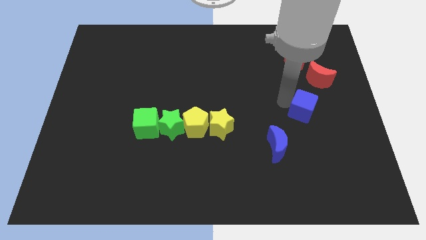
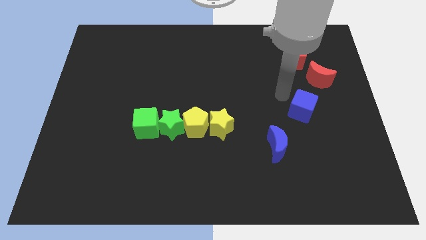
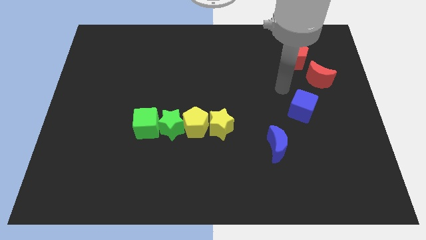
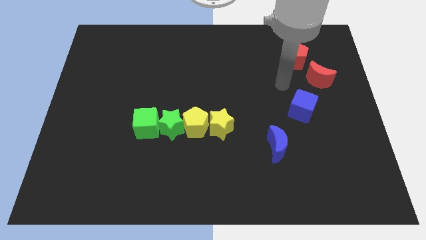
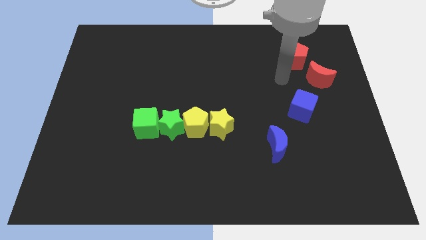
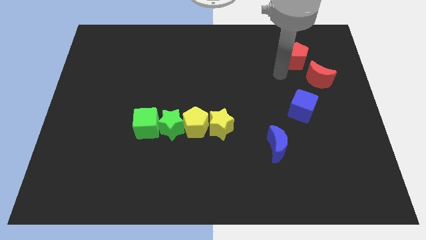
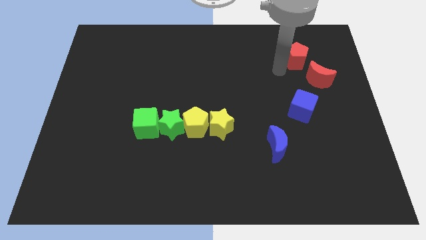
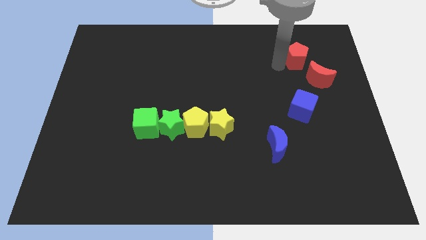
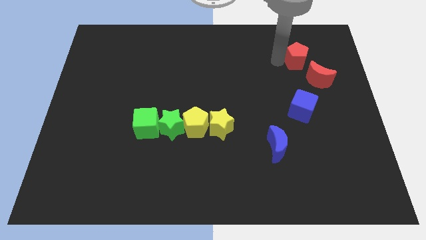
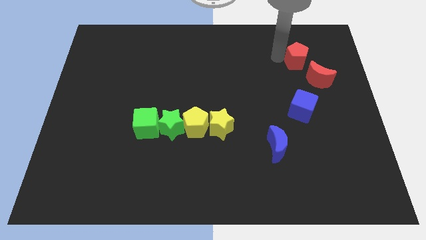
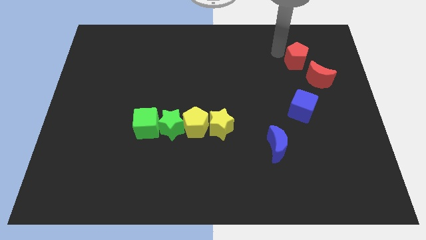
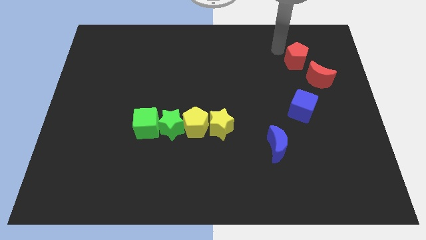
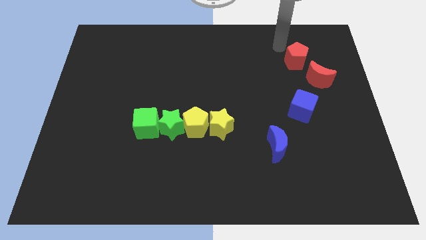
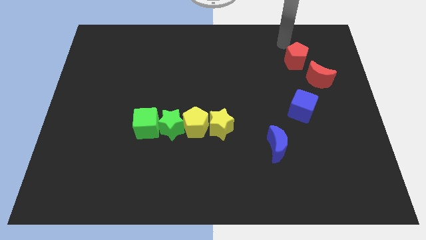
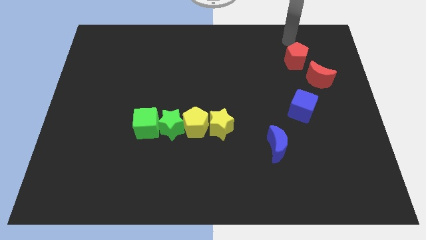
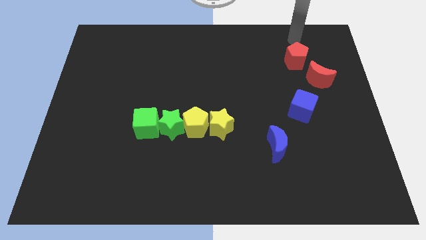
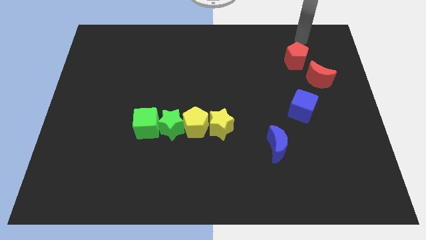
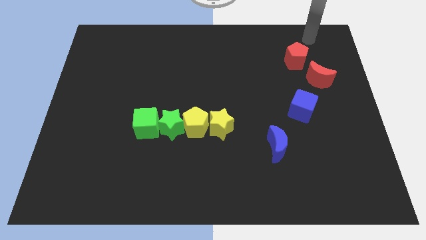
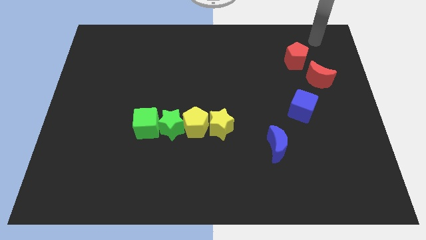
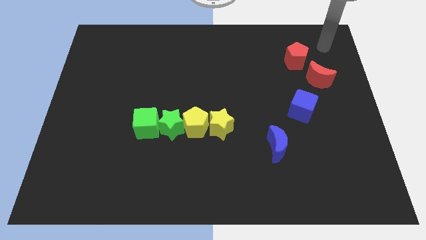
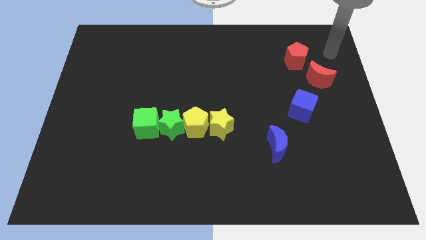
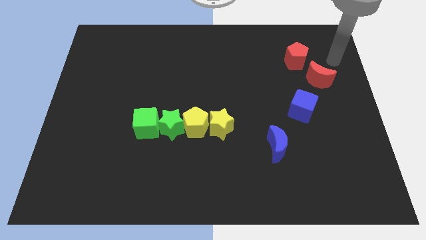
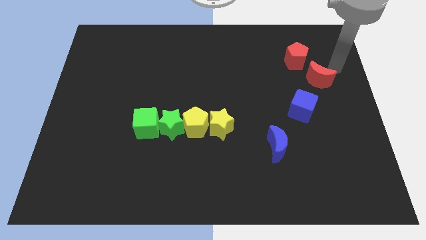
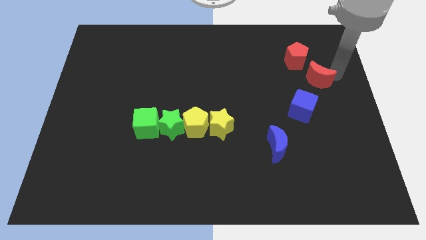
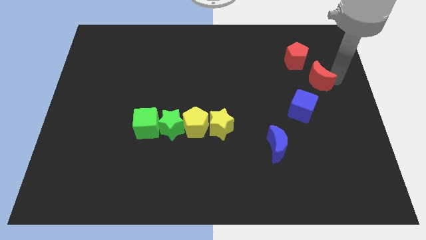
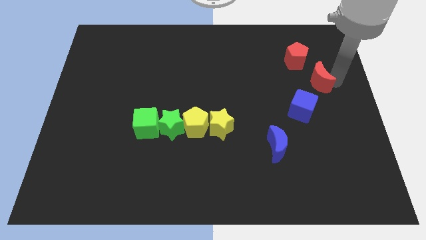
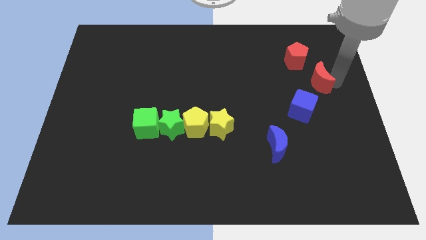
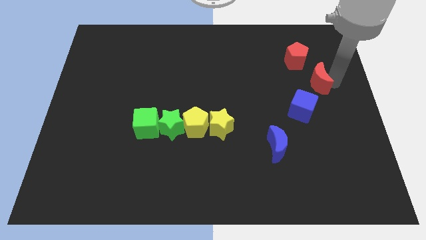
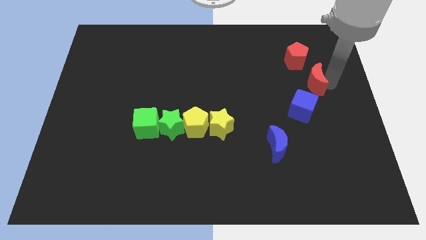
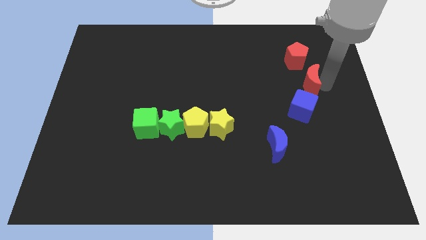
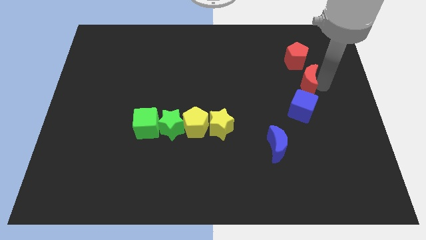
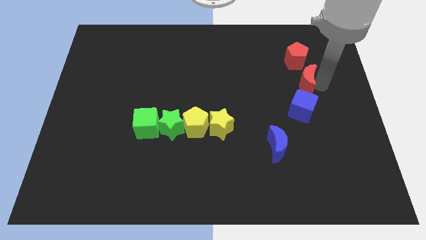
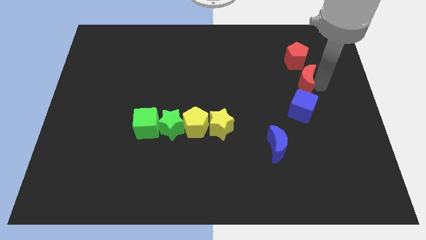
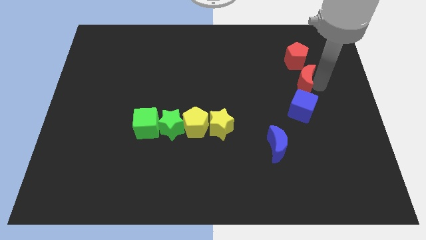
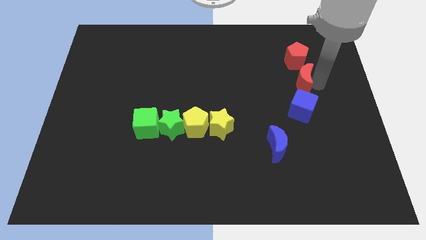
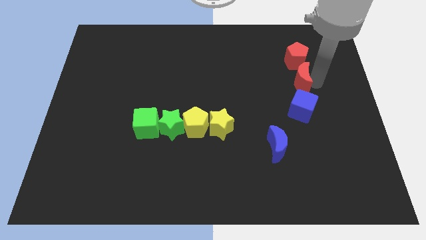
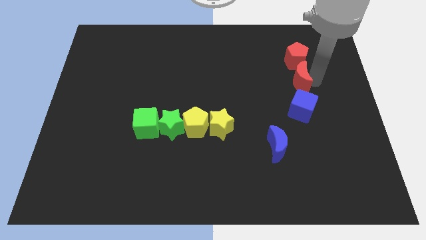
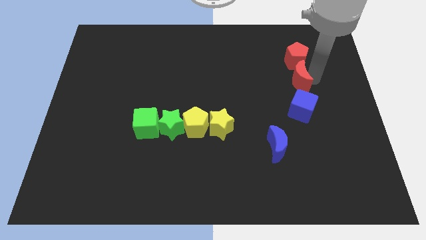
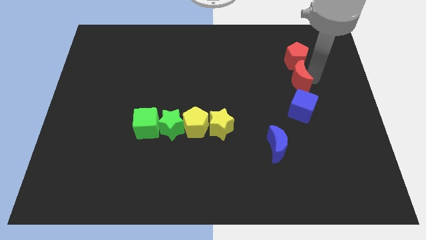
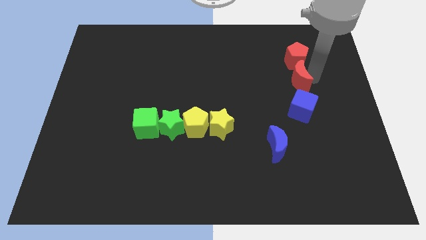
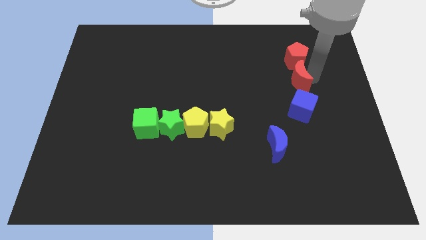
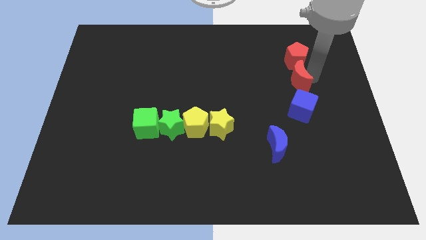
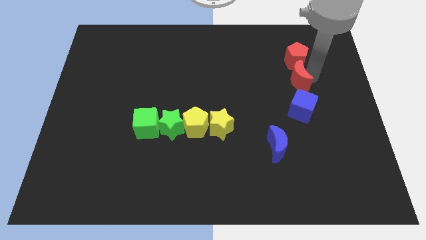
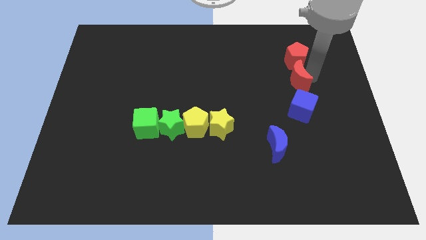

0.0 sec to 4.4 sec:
put the red moon vertically below the red pentagon

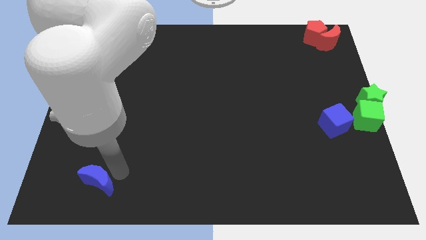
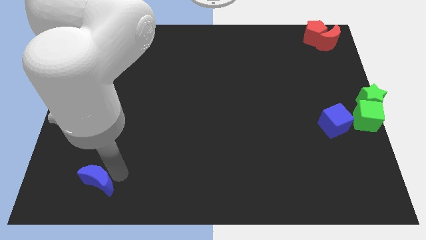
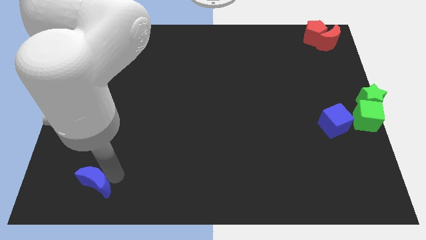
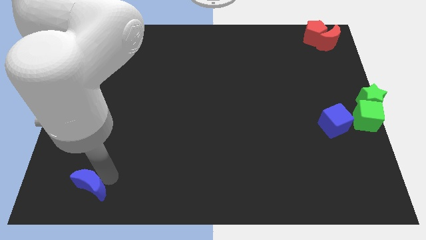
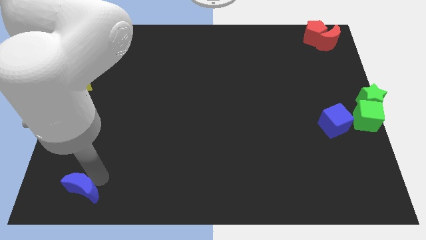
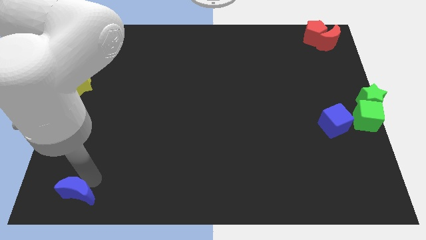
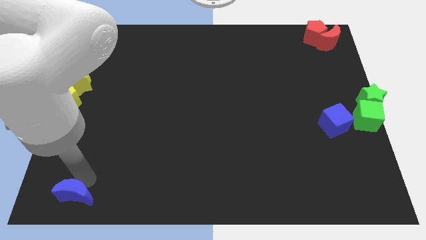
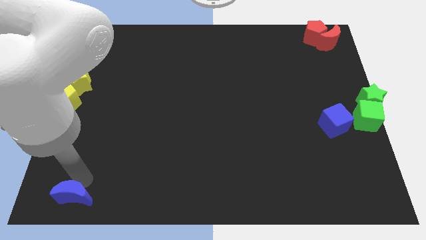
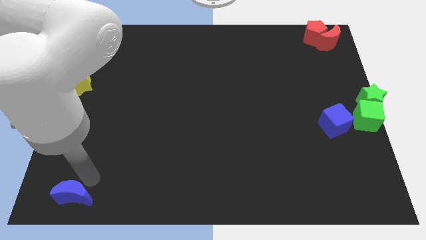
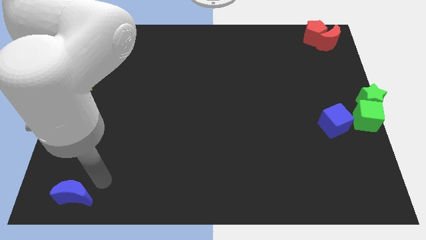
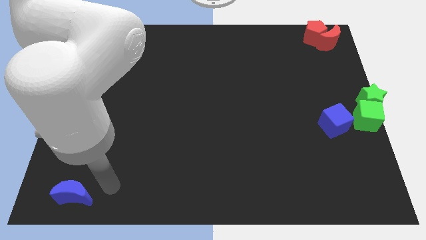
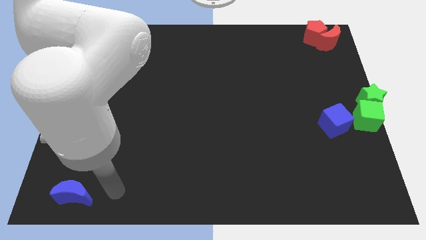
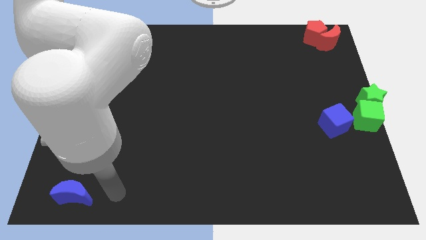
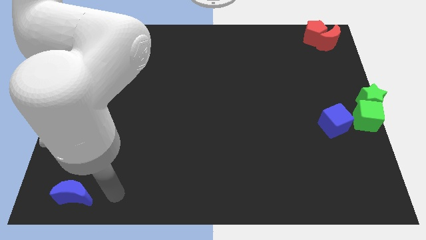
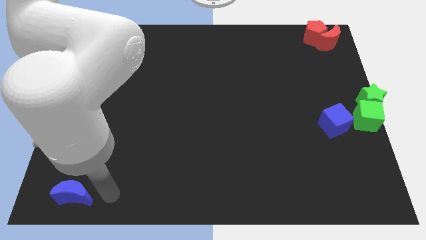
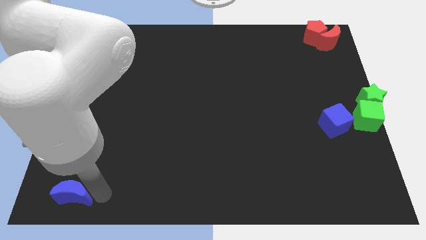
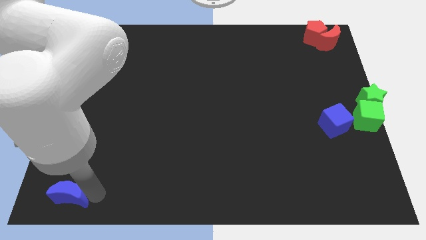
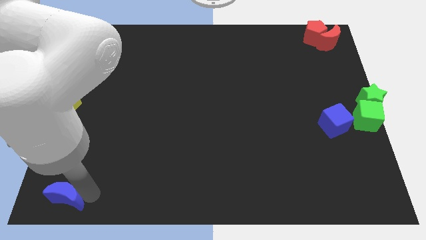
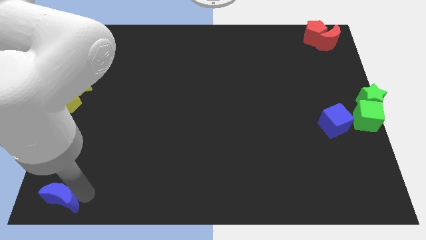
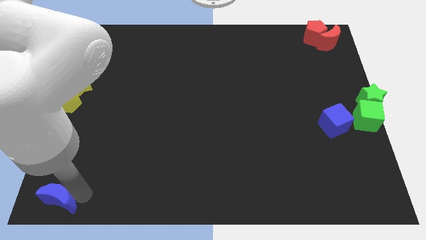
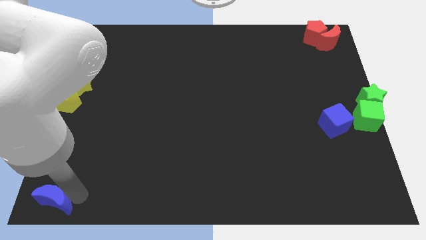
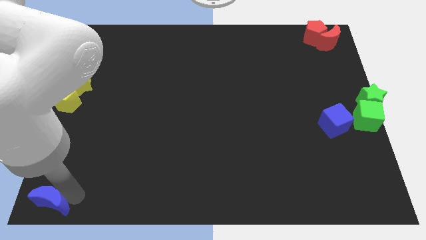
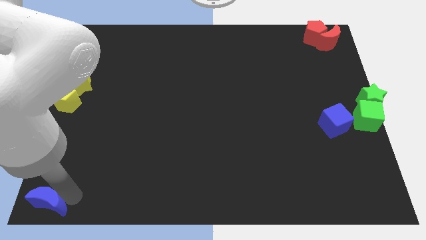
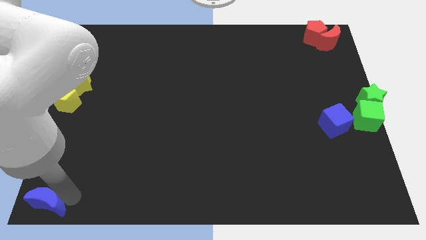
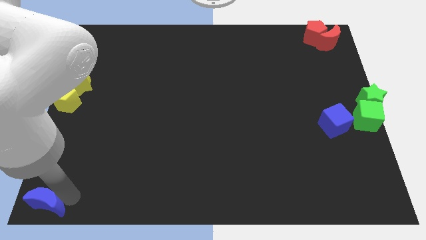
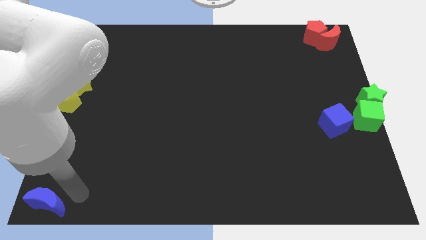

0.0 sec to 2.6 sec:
move the blue crescent towards the bottom left corner of the board

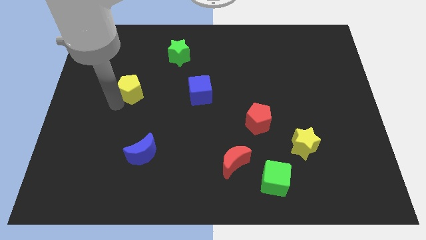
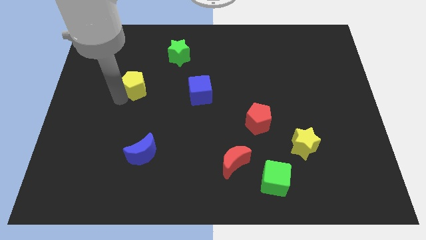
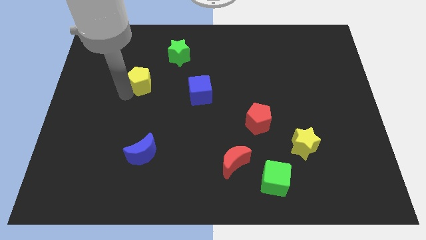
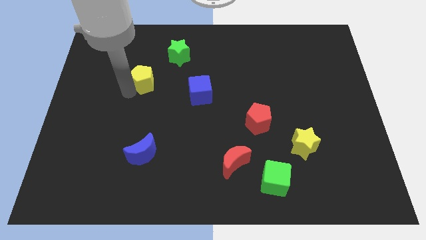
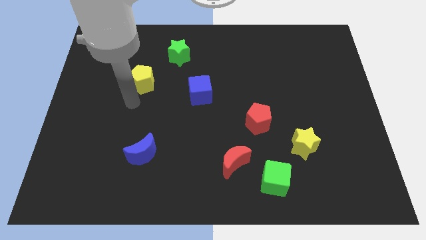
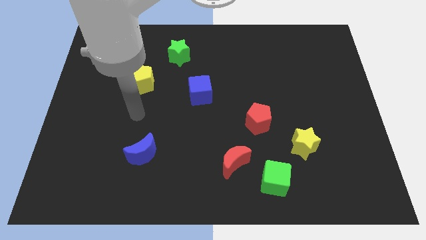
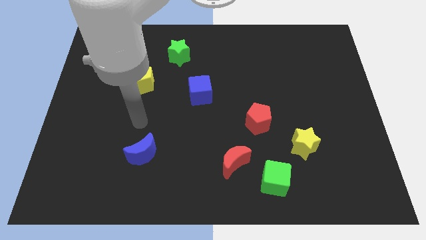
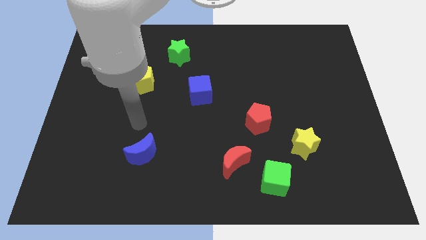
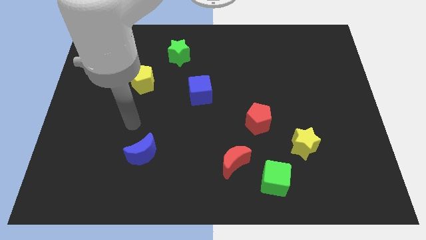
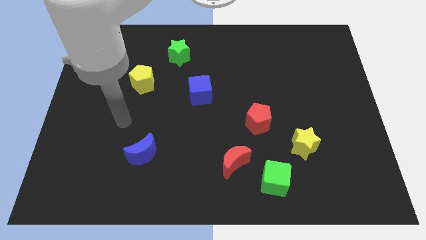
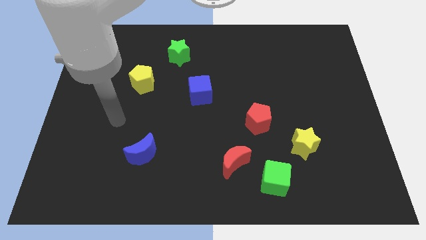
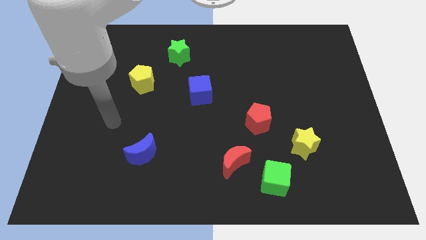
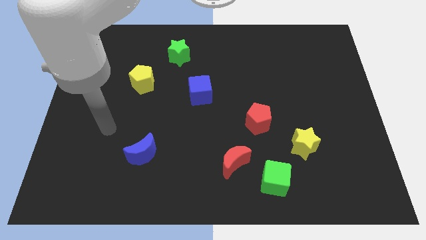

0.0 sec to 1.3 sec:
put the yellow pentagon vertically above the blue moon

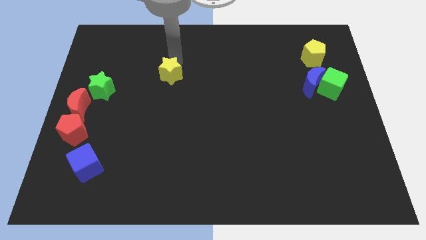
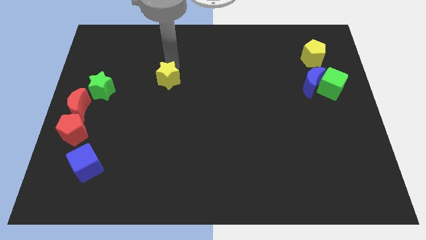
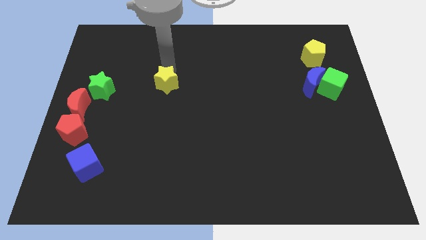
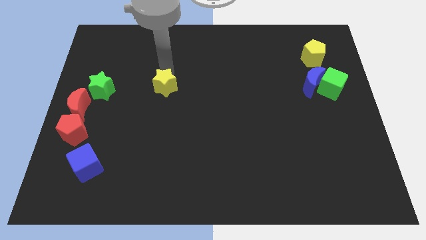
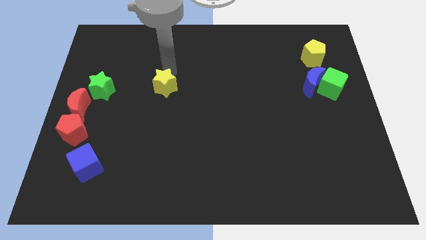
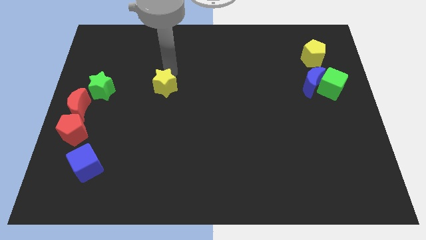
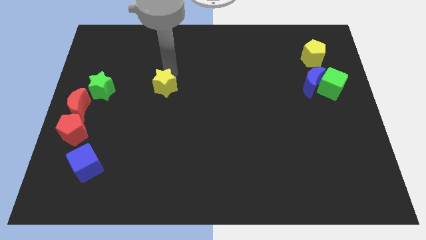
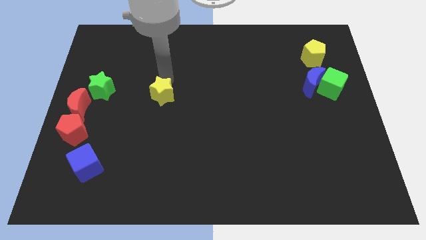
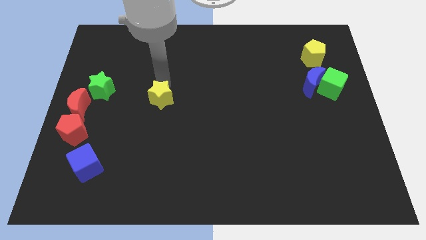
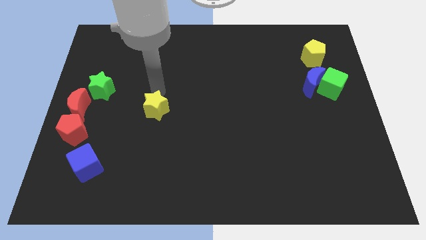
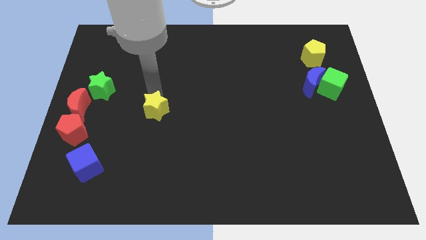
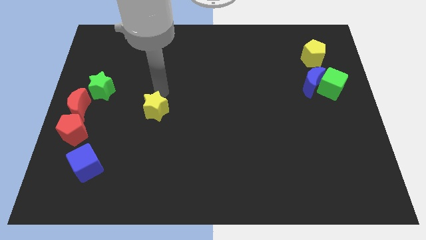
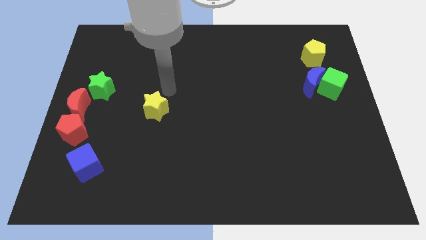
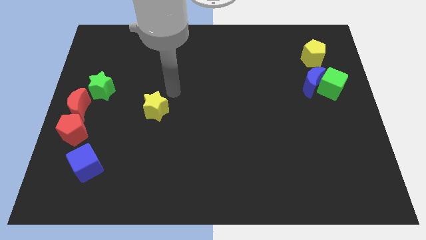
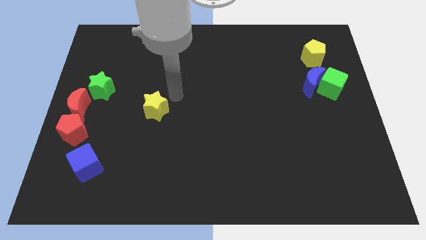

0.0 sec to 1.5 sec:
move the yellow star to the bottom of the board
